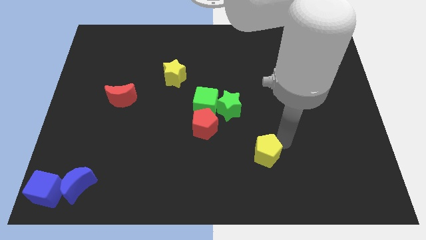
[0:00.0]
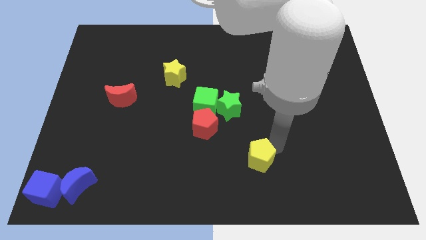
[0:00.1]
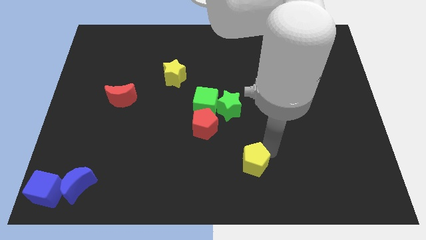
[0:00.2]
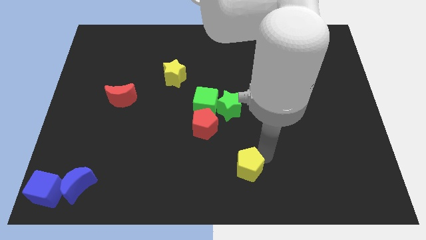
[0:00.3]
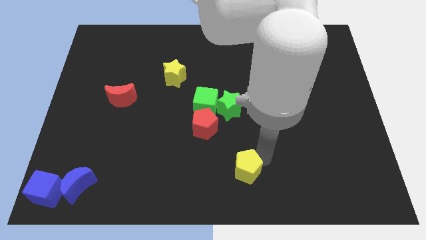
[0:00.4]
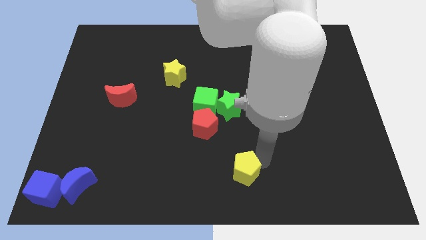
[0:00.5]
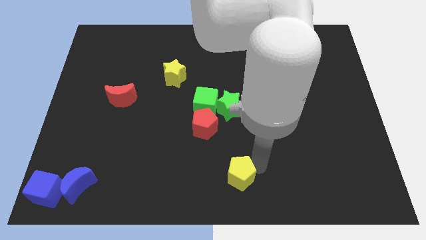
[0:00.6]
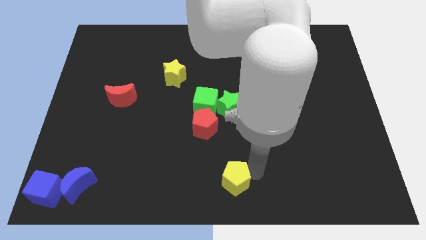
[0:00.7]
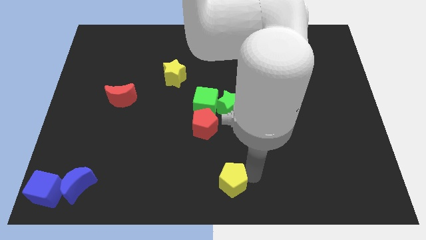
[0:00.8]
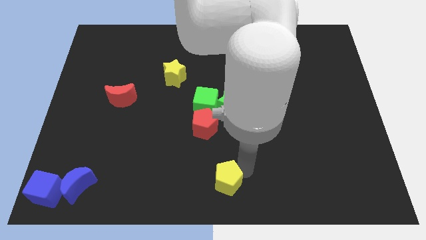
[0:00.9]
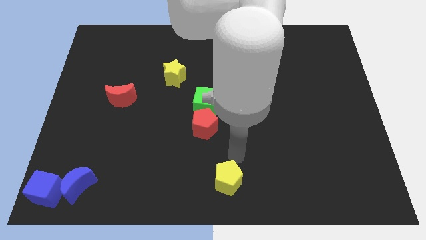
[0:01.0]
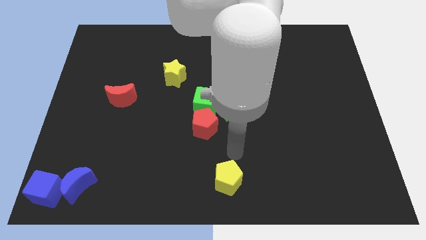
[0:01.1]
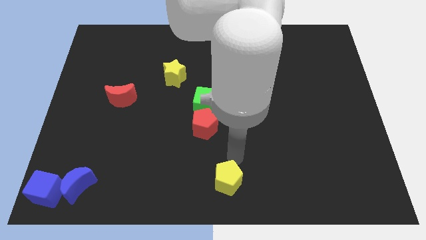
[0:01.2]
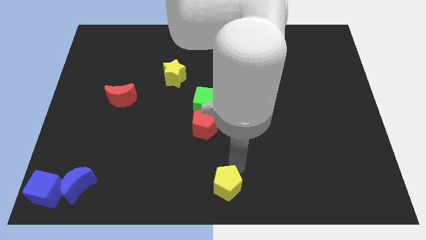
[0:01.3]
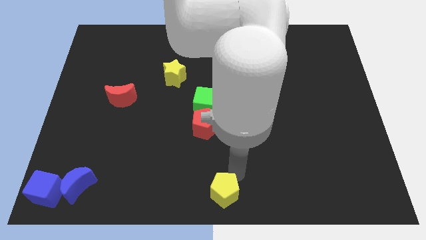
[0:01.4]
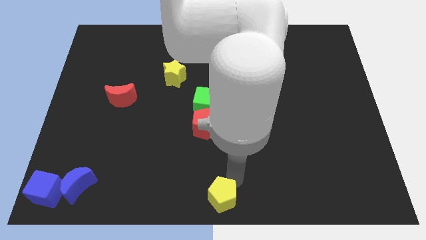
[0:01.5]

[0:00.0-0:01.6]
place the yellow pentagon at the bottom center of the board

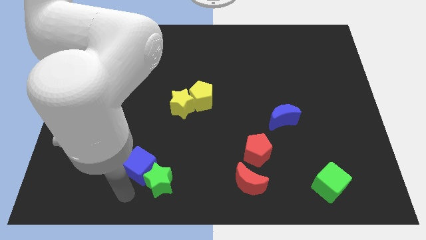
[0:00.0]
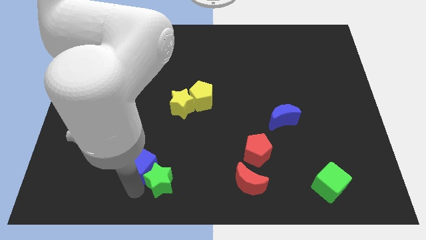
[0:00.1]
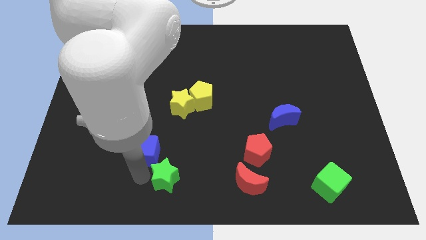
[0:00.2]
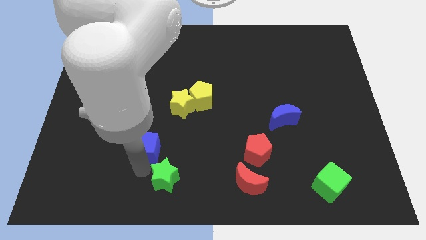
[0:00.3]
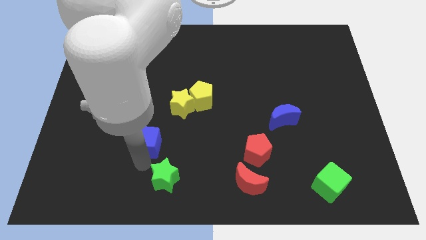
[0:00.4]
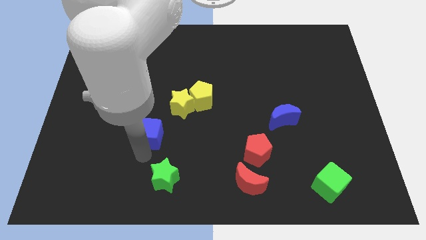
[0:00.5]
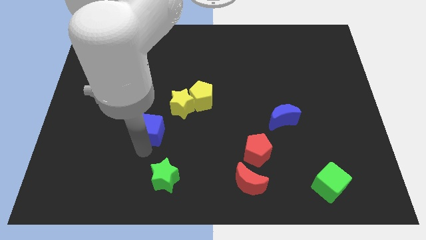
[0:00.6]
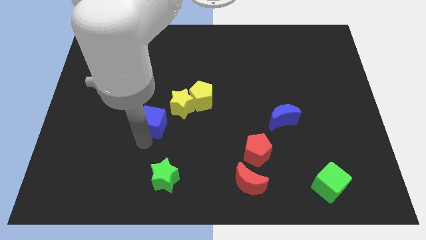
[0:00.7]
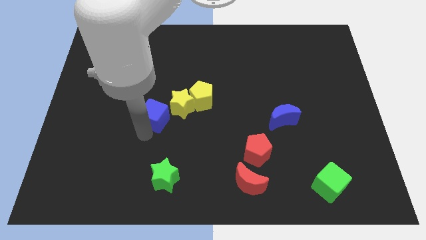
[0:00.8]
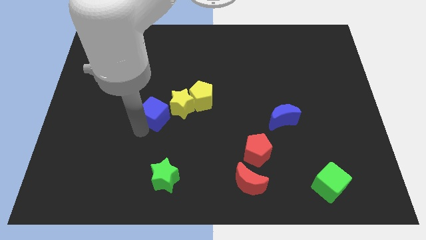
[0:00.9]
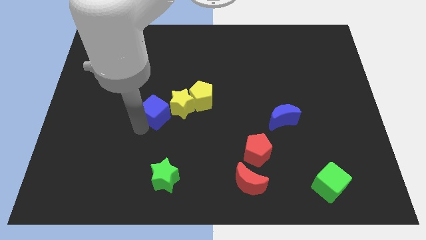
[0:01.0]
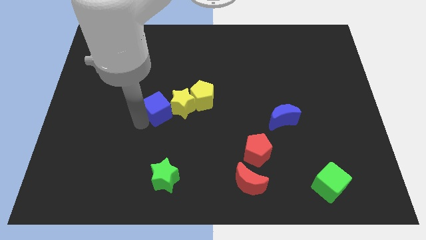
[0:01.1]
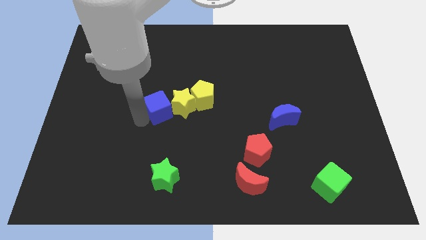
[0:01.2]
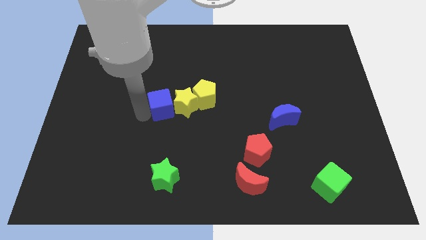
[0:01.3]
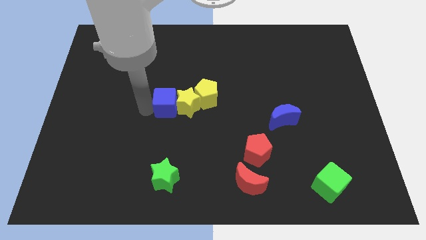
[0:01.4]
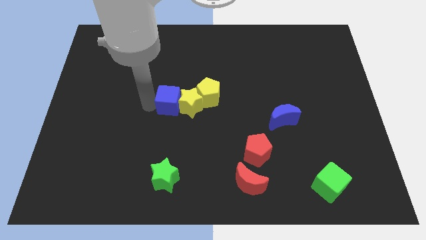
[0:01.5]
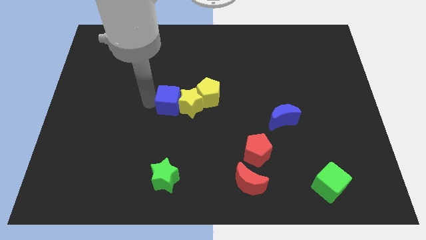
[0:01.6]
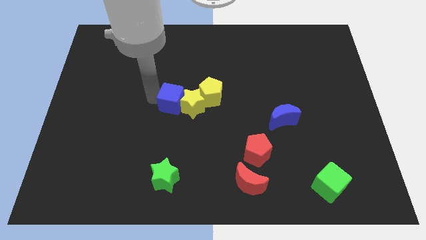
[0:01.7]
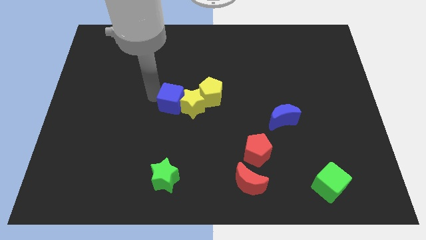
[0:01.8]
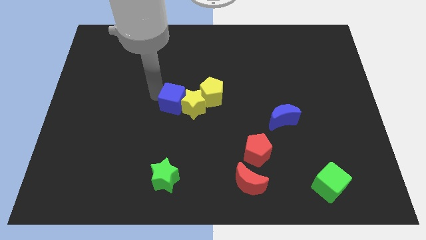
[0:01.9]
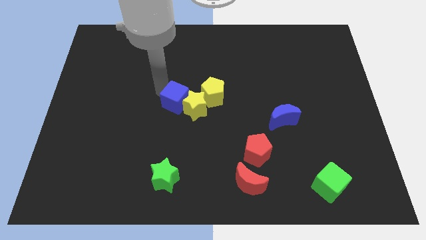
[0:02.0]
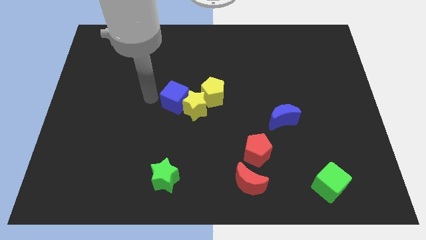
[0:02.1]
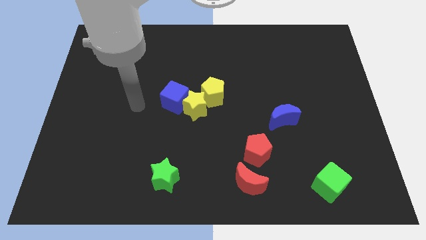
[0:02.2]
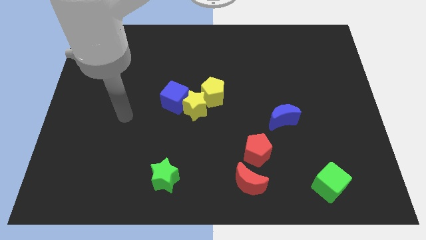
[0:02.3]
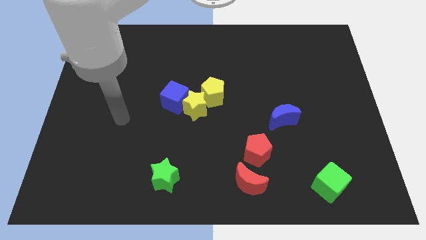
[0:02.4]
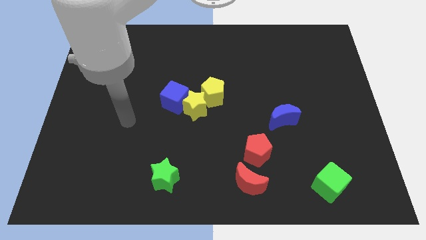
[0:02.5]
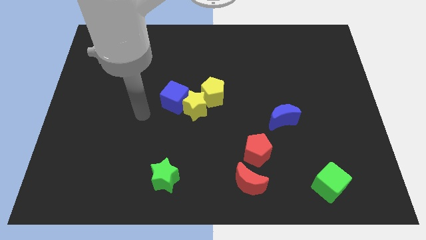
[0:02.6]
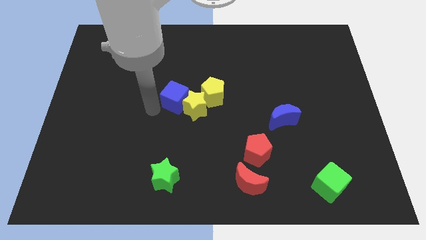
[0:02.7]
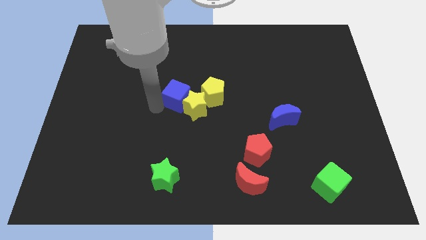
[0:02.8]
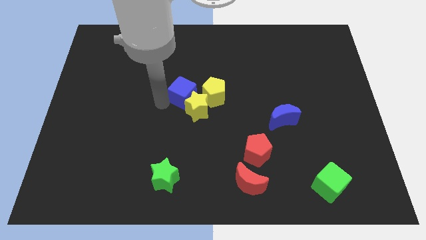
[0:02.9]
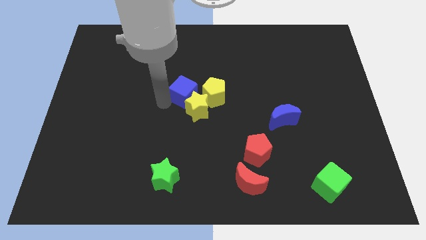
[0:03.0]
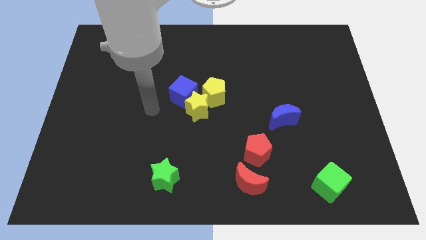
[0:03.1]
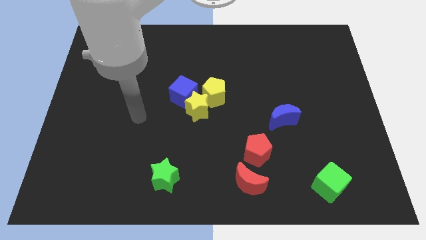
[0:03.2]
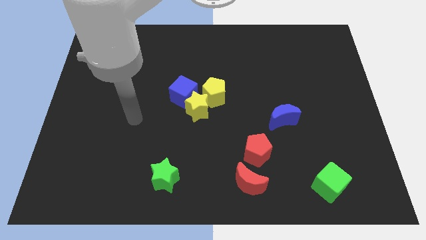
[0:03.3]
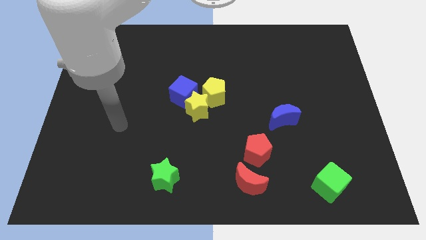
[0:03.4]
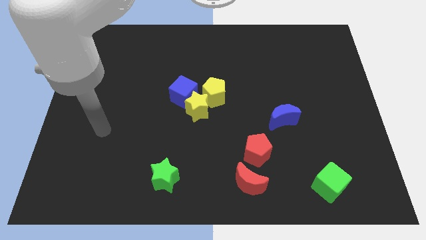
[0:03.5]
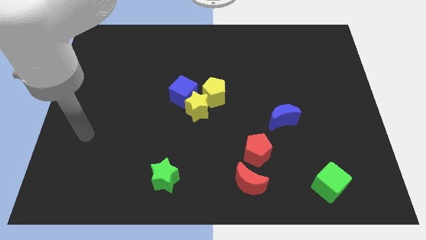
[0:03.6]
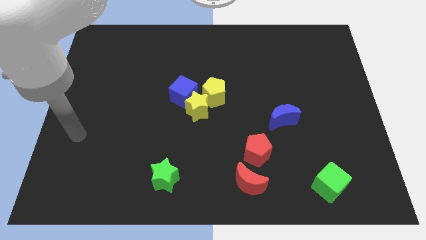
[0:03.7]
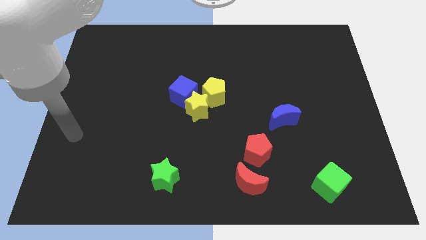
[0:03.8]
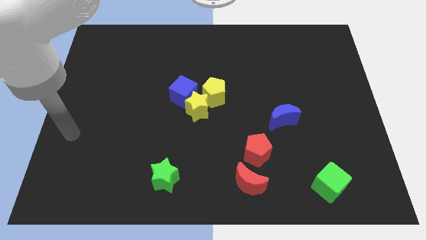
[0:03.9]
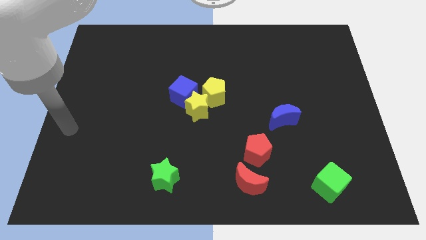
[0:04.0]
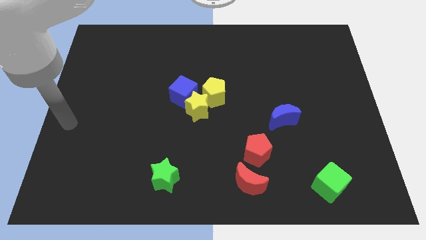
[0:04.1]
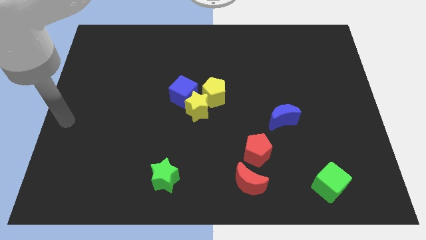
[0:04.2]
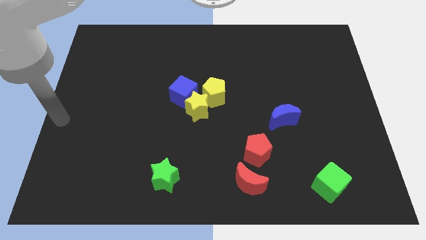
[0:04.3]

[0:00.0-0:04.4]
push the blue cube into the yellow blocks

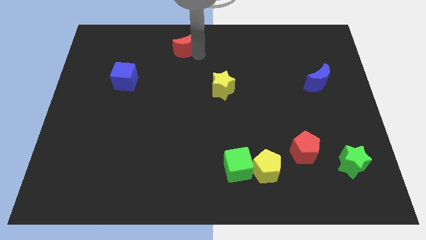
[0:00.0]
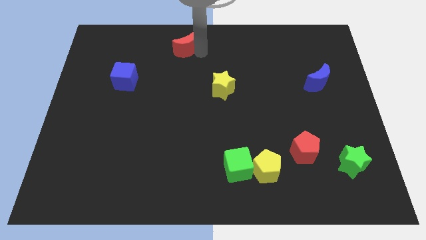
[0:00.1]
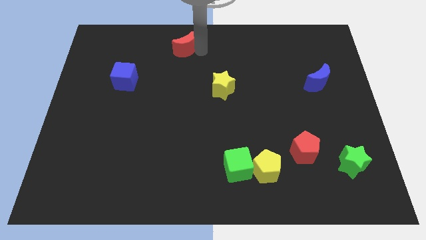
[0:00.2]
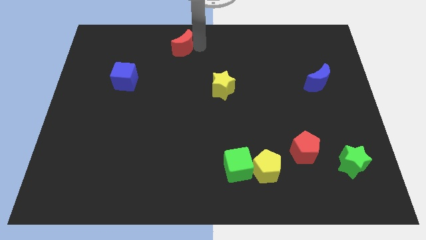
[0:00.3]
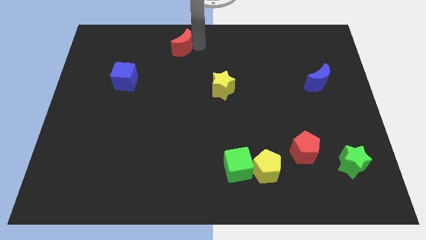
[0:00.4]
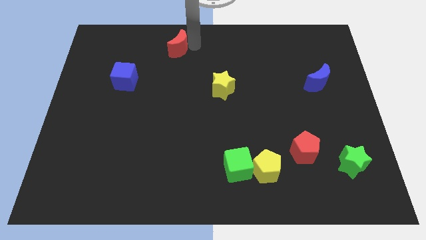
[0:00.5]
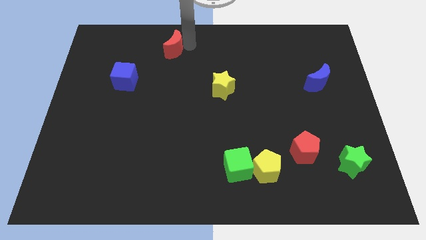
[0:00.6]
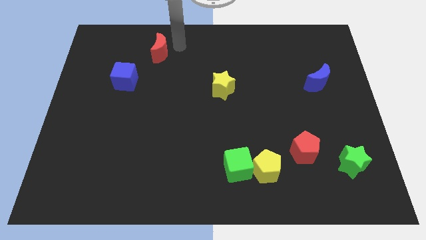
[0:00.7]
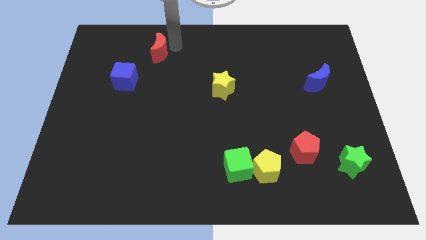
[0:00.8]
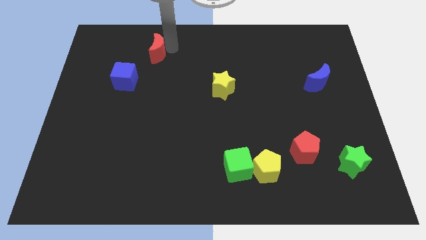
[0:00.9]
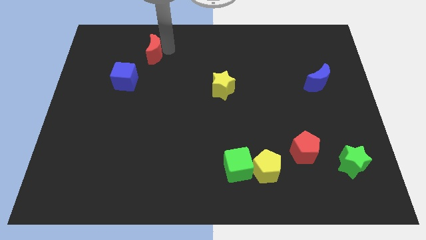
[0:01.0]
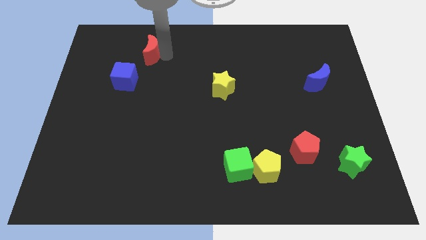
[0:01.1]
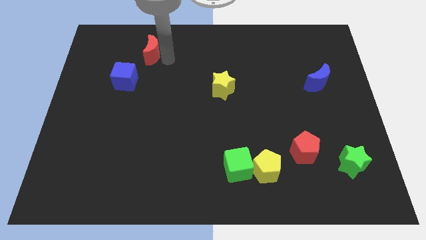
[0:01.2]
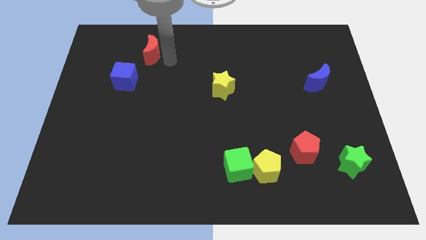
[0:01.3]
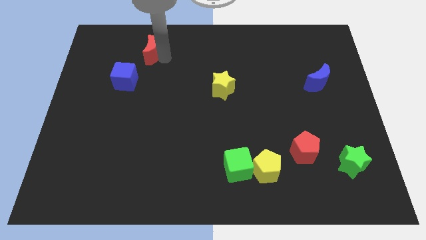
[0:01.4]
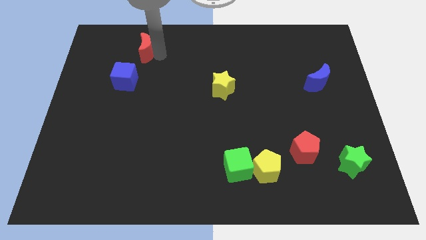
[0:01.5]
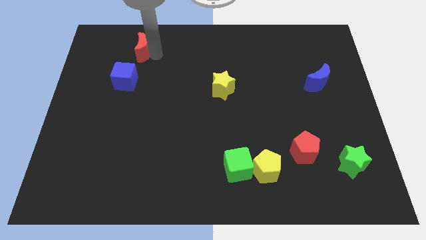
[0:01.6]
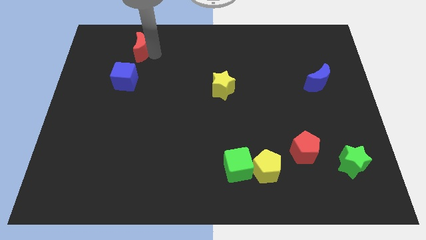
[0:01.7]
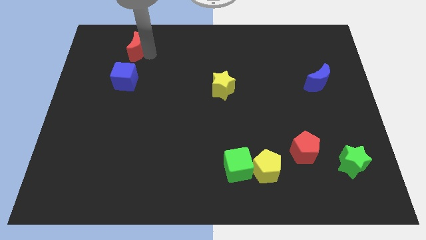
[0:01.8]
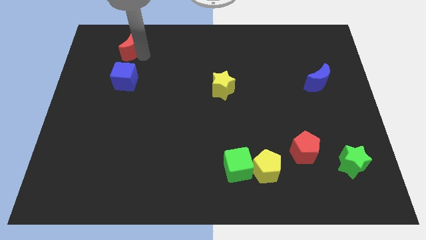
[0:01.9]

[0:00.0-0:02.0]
place the red crescent above the blue cube

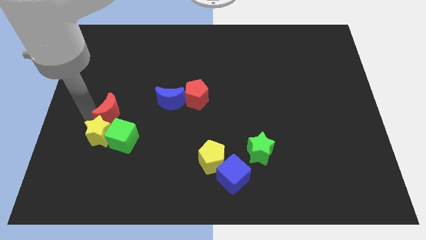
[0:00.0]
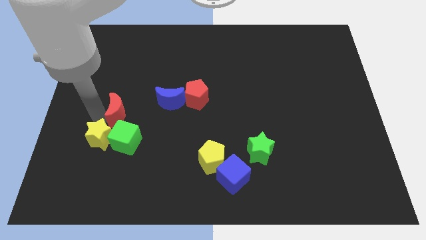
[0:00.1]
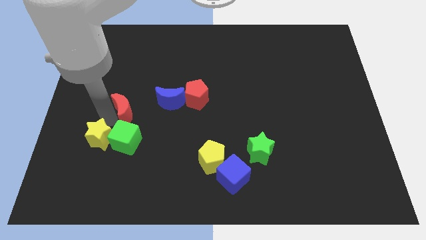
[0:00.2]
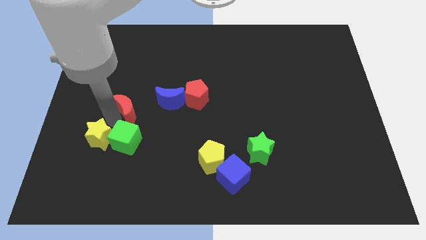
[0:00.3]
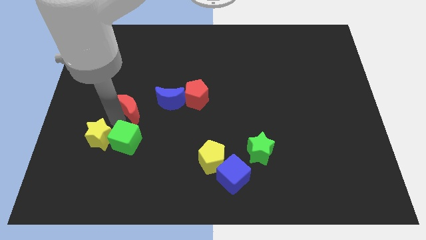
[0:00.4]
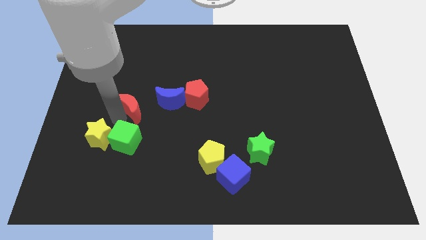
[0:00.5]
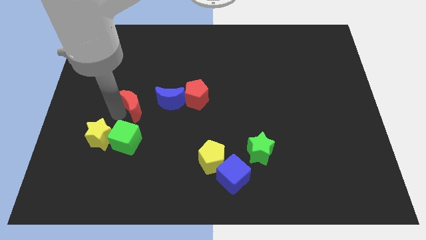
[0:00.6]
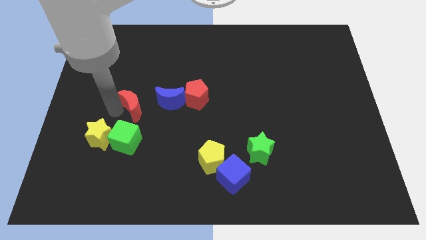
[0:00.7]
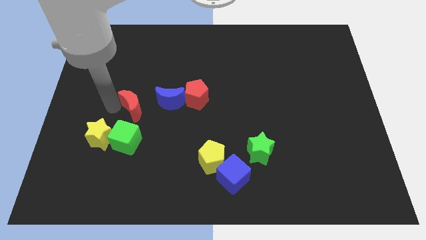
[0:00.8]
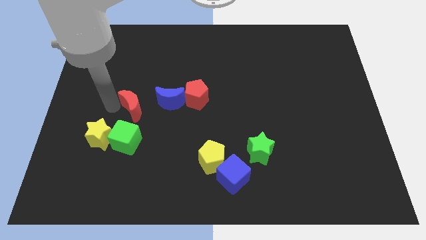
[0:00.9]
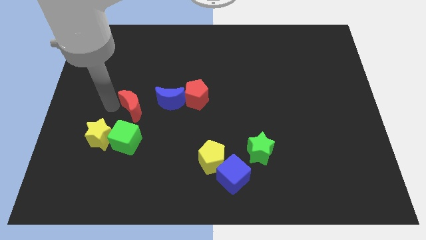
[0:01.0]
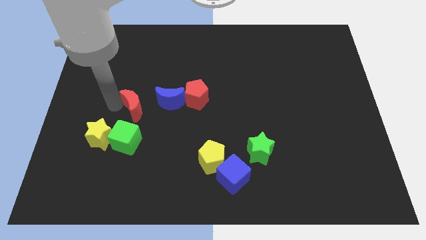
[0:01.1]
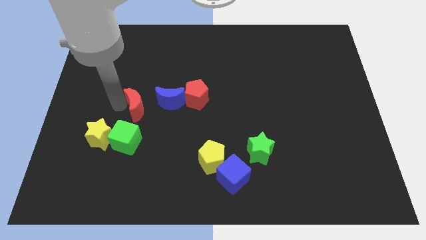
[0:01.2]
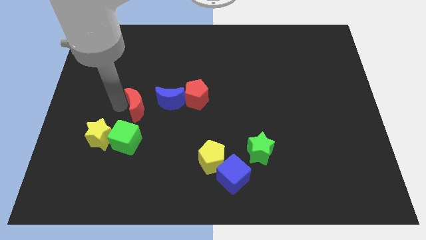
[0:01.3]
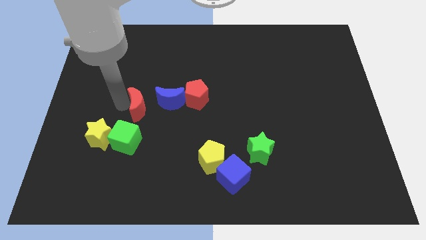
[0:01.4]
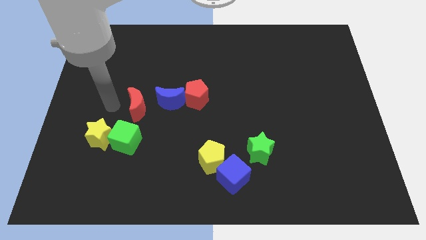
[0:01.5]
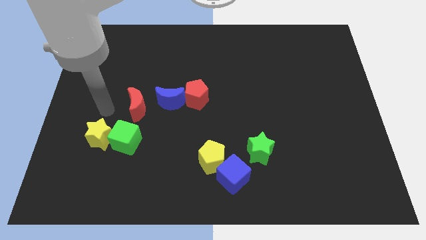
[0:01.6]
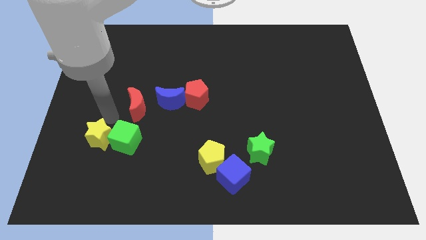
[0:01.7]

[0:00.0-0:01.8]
separate the red moon from the yellow star
